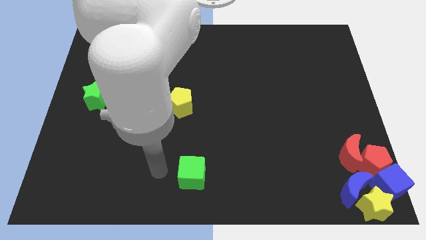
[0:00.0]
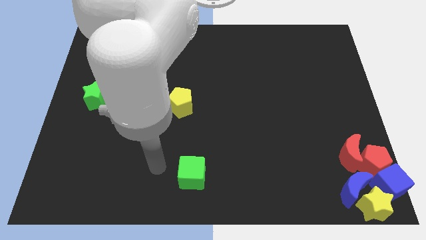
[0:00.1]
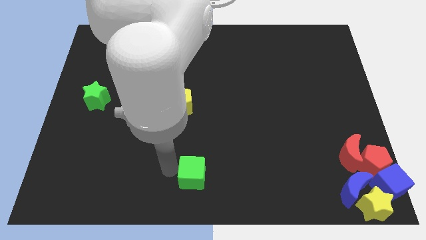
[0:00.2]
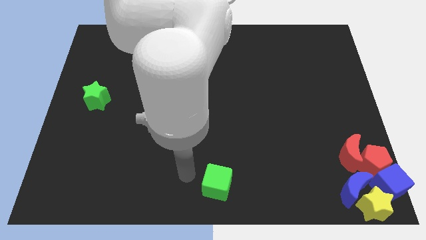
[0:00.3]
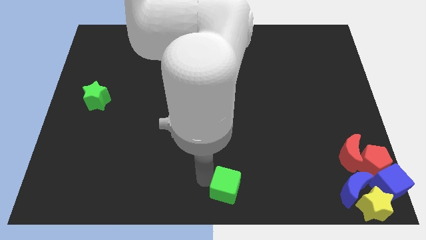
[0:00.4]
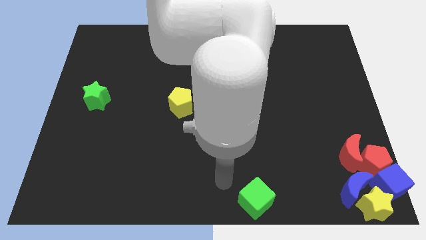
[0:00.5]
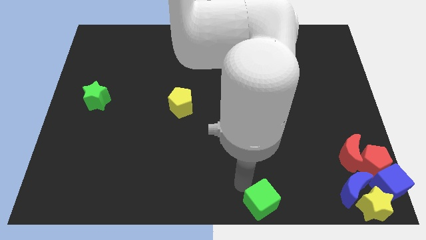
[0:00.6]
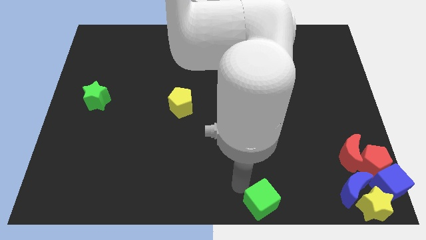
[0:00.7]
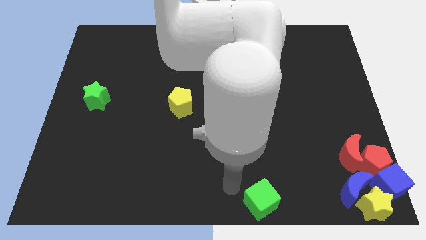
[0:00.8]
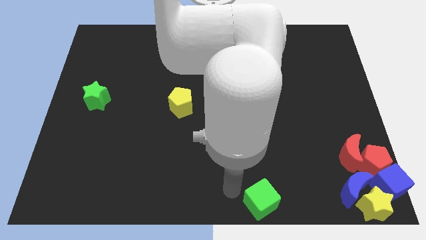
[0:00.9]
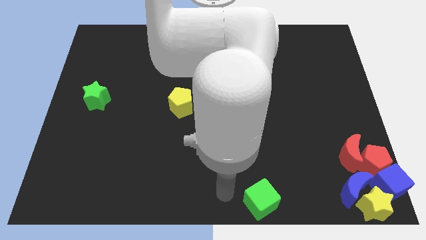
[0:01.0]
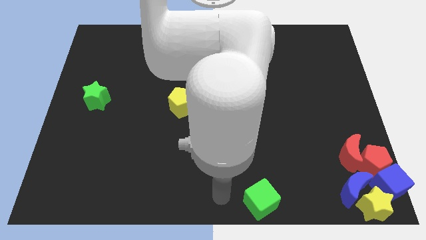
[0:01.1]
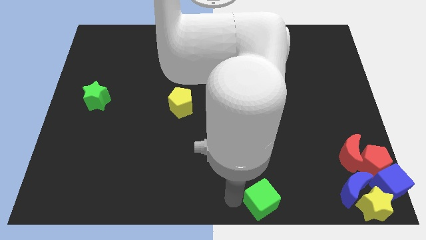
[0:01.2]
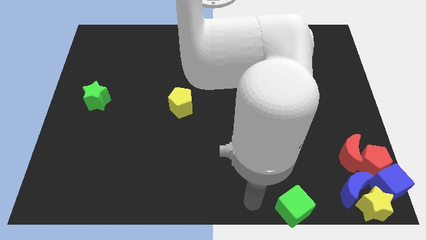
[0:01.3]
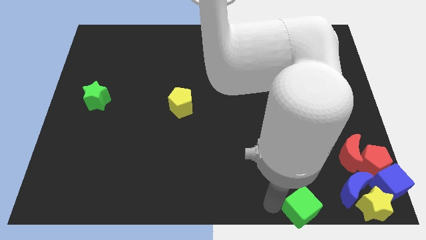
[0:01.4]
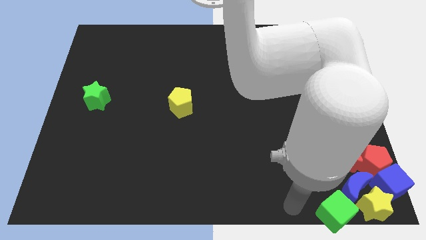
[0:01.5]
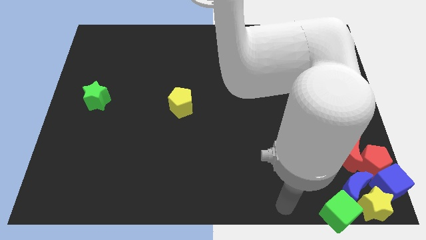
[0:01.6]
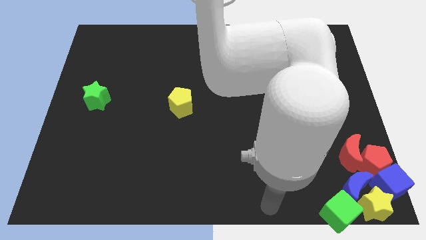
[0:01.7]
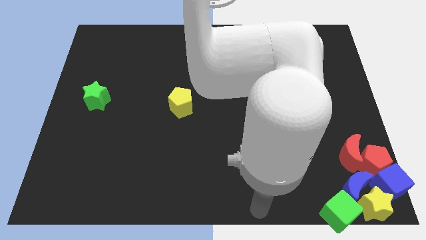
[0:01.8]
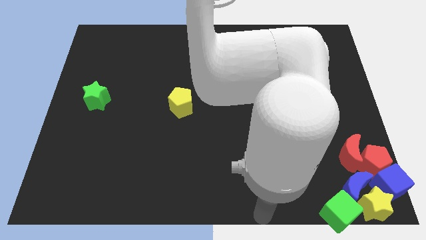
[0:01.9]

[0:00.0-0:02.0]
move the green cube into the blue moon

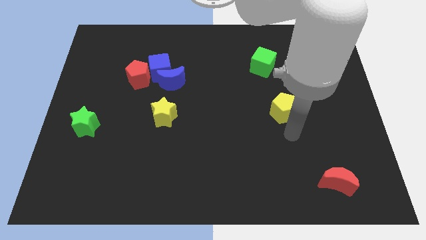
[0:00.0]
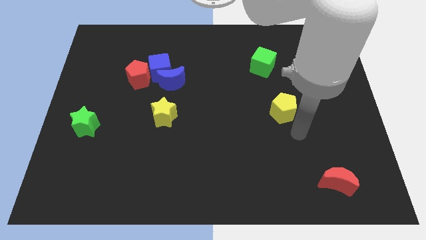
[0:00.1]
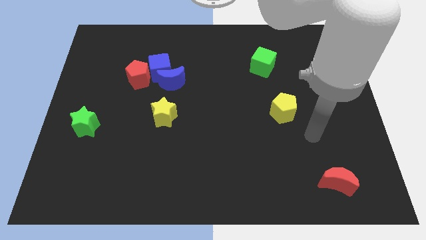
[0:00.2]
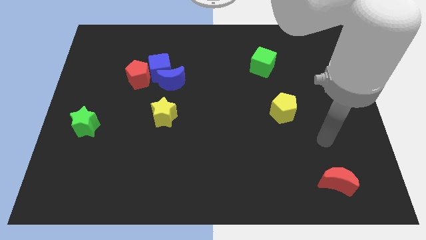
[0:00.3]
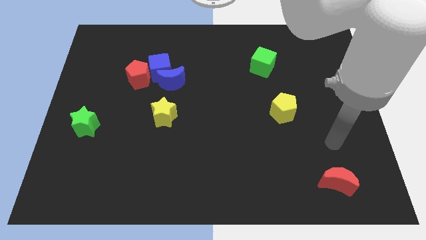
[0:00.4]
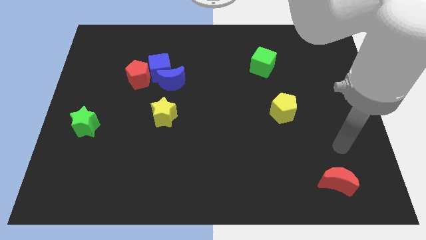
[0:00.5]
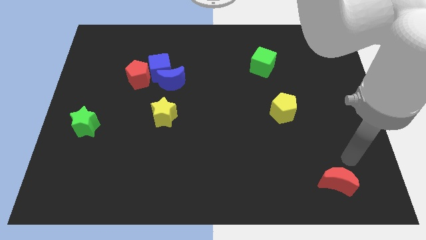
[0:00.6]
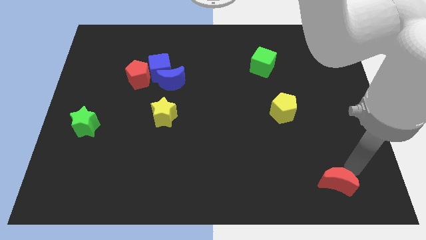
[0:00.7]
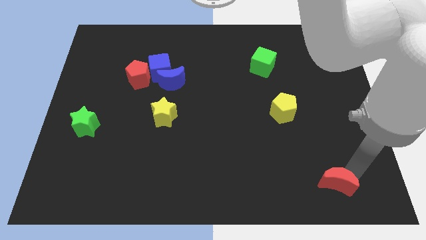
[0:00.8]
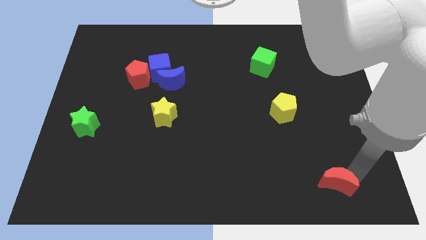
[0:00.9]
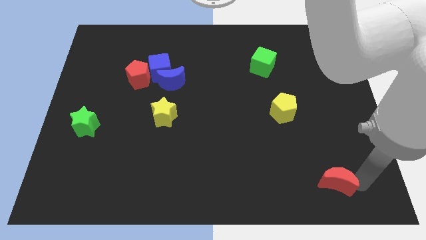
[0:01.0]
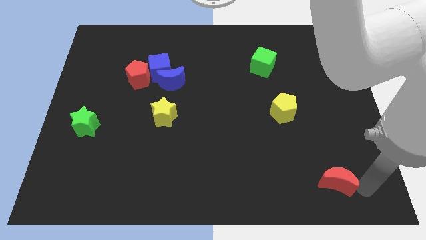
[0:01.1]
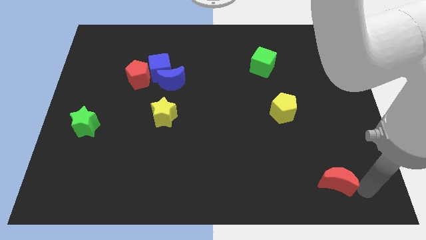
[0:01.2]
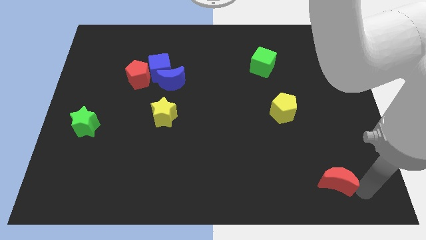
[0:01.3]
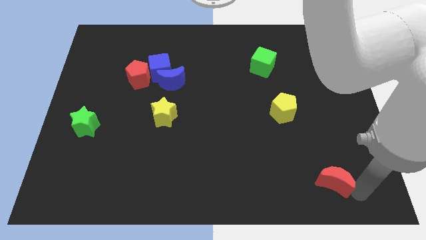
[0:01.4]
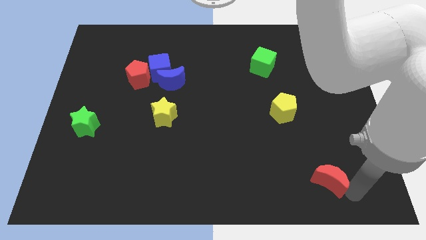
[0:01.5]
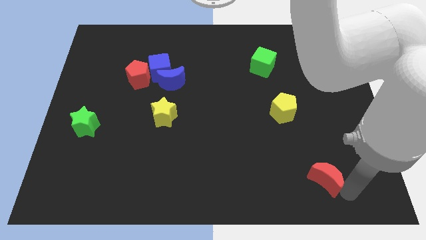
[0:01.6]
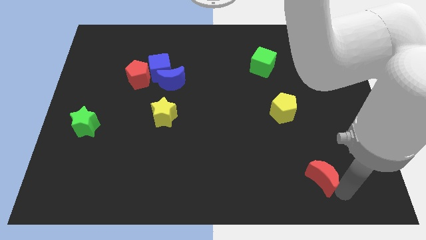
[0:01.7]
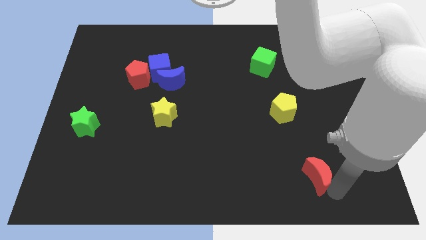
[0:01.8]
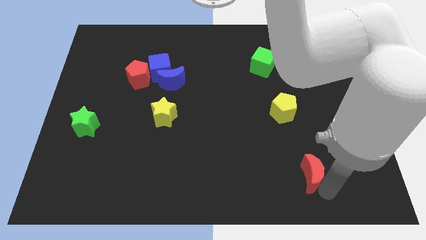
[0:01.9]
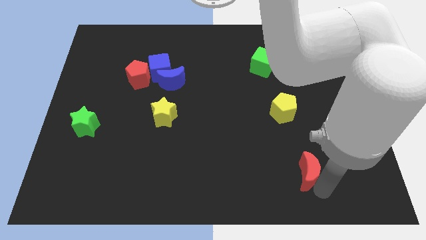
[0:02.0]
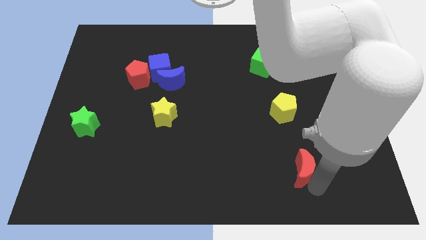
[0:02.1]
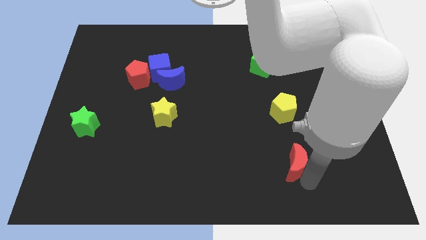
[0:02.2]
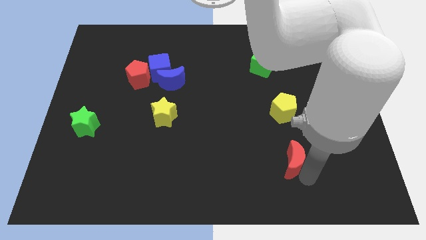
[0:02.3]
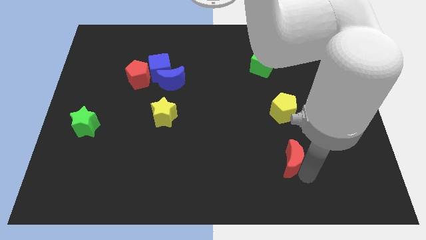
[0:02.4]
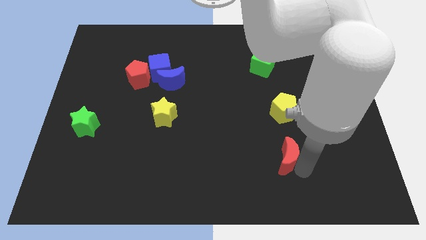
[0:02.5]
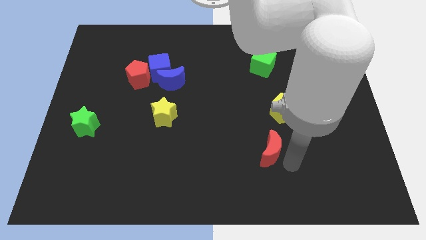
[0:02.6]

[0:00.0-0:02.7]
place red moon to the bottom of yellow pentagon

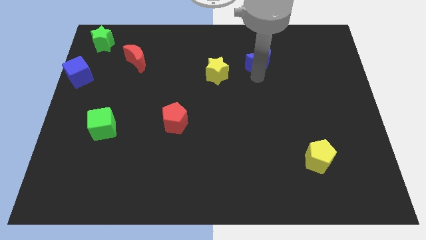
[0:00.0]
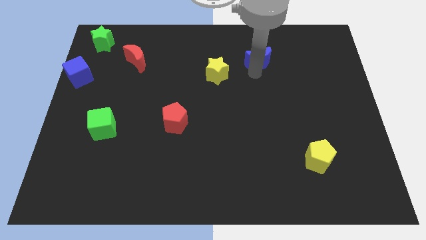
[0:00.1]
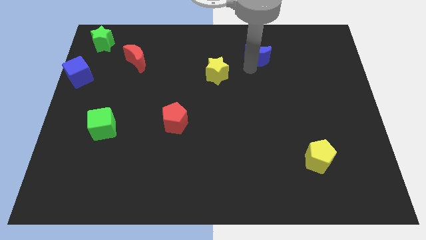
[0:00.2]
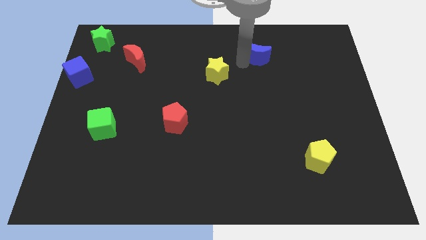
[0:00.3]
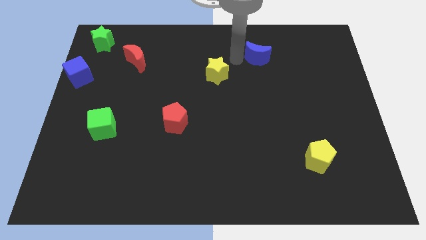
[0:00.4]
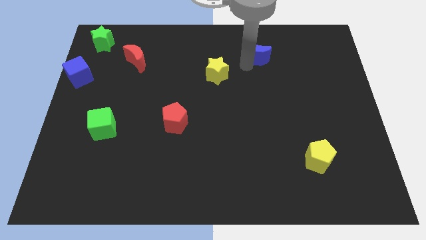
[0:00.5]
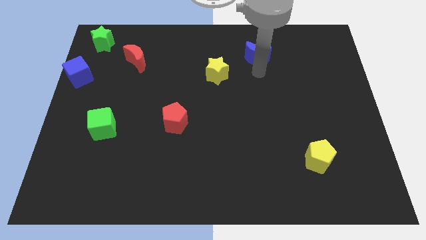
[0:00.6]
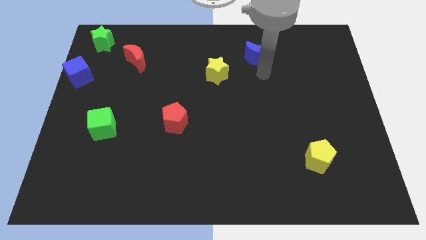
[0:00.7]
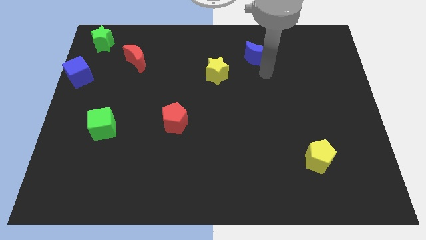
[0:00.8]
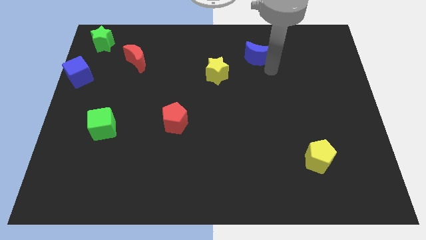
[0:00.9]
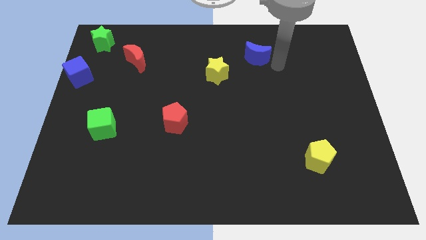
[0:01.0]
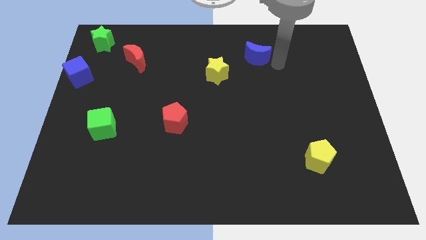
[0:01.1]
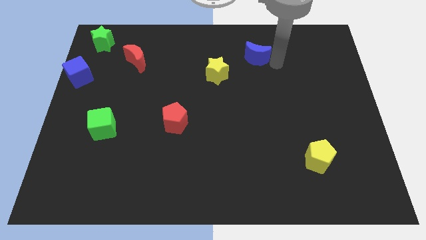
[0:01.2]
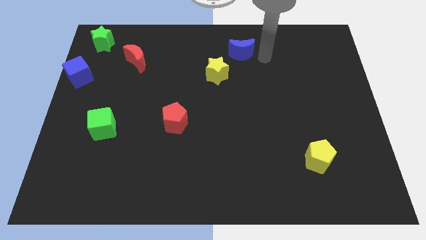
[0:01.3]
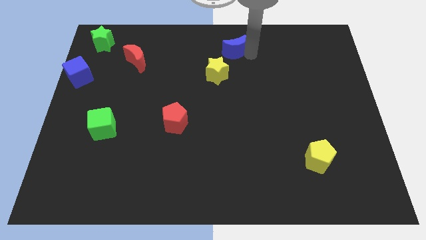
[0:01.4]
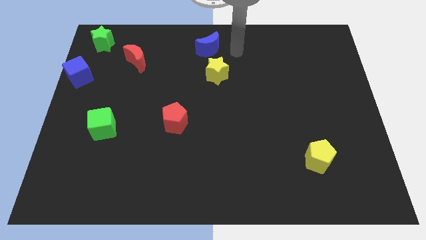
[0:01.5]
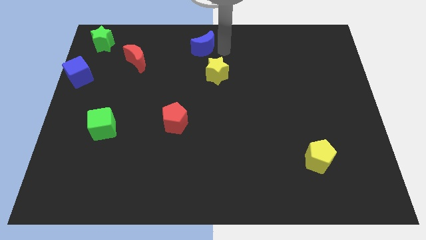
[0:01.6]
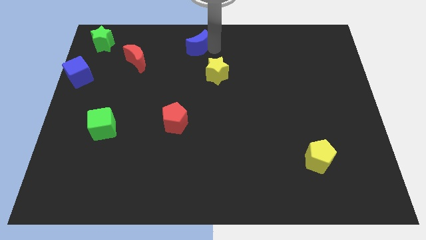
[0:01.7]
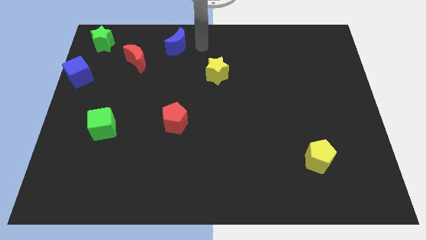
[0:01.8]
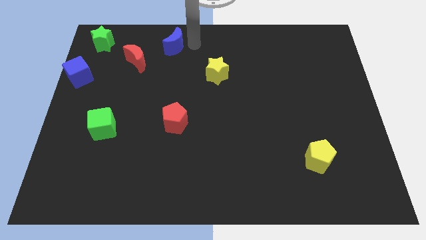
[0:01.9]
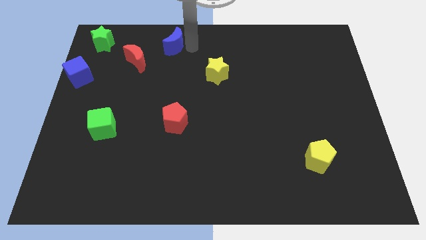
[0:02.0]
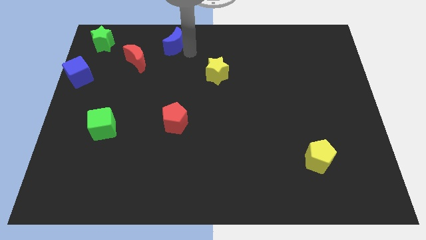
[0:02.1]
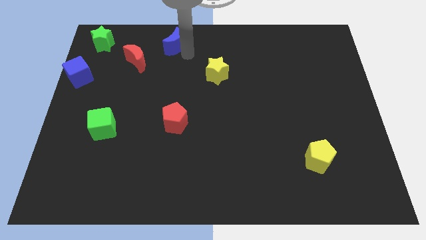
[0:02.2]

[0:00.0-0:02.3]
move the blue moon to the top of the red pentagon

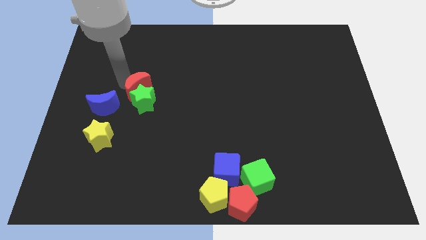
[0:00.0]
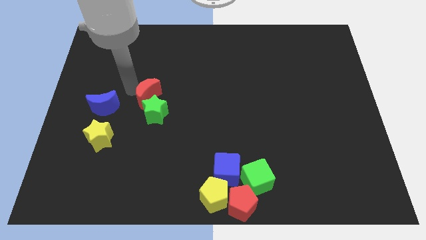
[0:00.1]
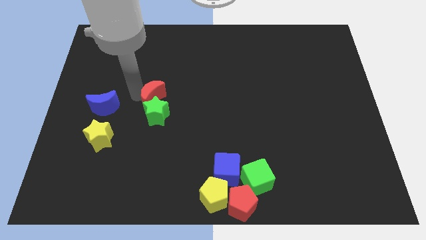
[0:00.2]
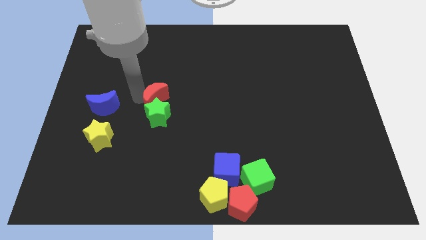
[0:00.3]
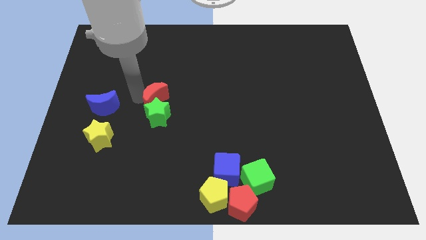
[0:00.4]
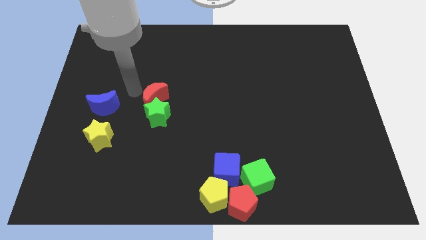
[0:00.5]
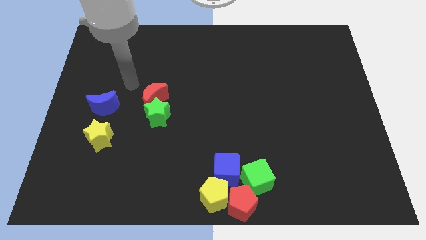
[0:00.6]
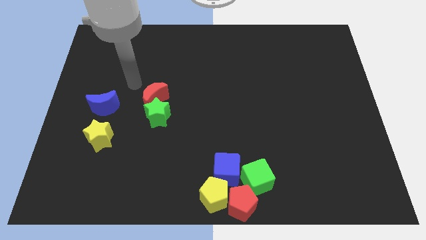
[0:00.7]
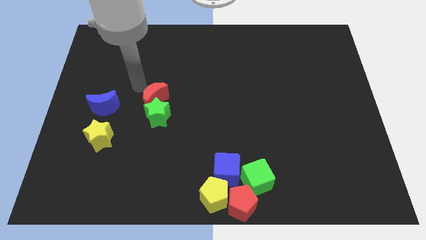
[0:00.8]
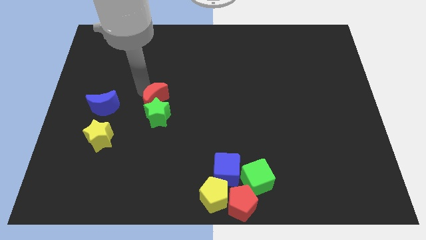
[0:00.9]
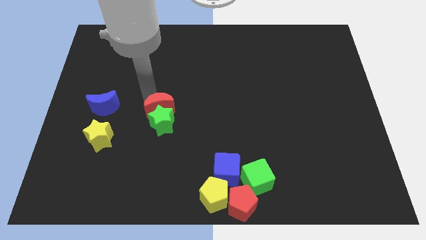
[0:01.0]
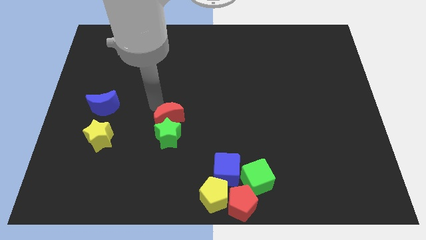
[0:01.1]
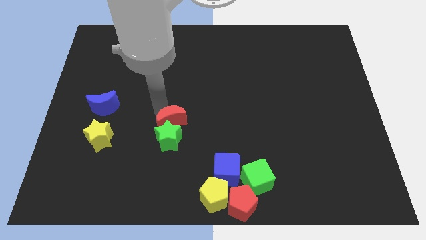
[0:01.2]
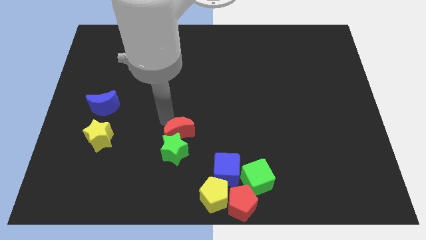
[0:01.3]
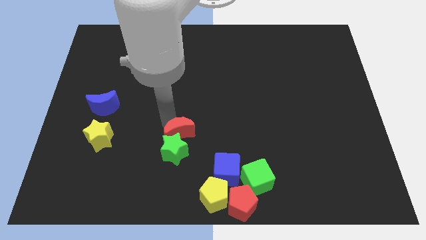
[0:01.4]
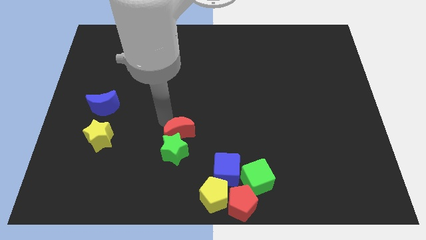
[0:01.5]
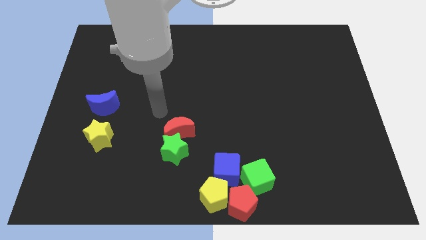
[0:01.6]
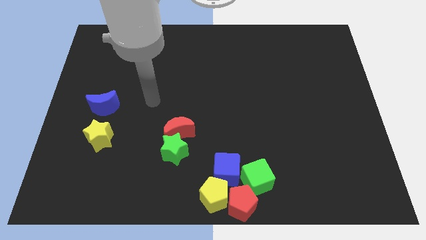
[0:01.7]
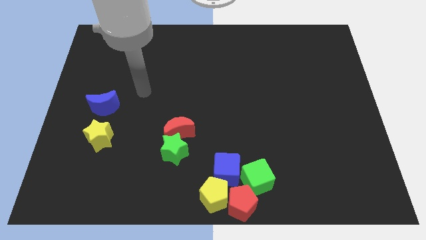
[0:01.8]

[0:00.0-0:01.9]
move the green star and red moon towards the group of blocks
